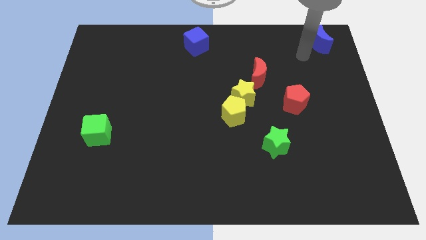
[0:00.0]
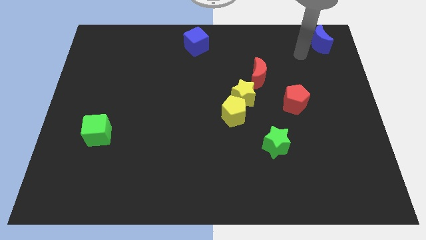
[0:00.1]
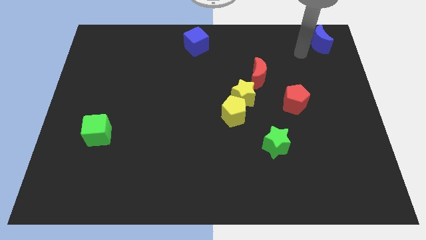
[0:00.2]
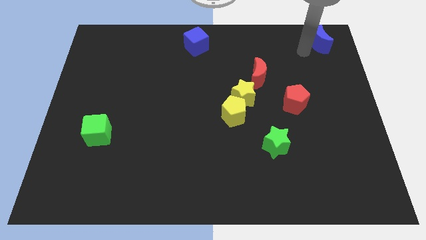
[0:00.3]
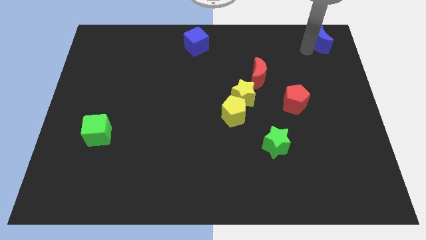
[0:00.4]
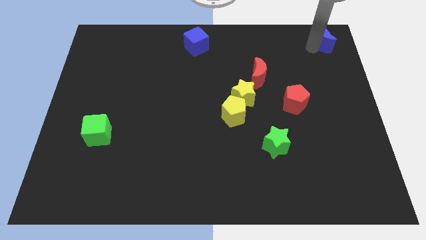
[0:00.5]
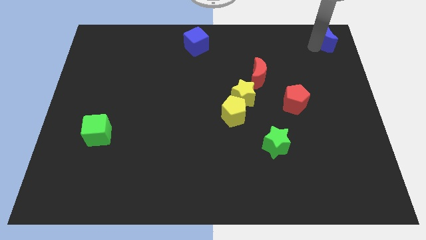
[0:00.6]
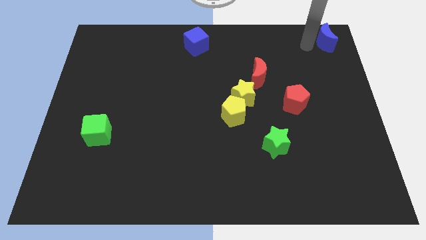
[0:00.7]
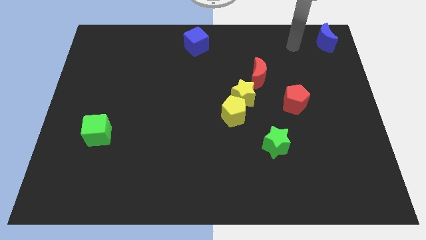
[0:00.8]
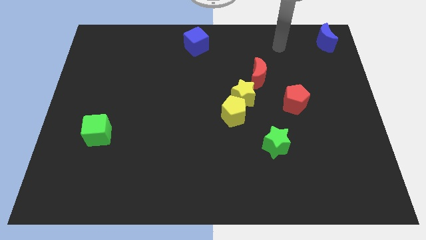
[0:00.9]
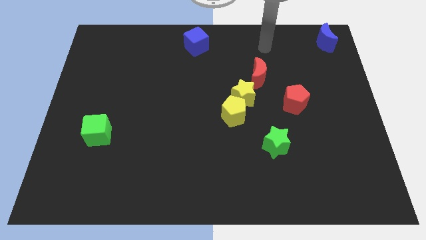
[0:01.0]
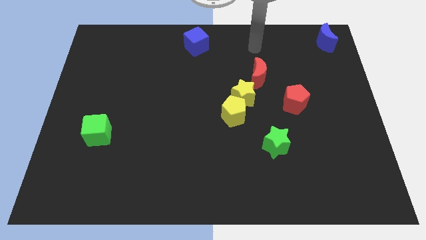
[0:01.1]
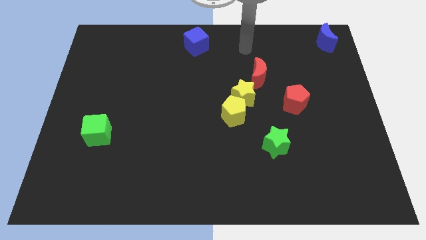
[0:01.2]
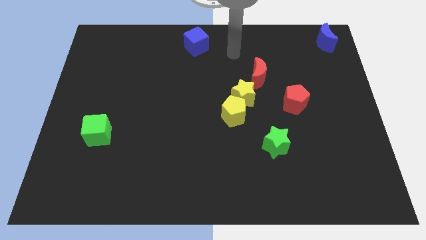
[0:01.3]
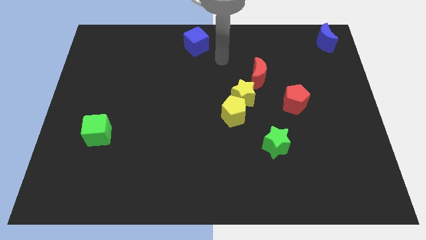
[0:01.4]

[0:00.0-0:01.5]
put your arm in between the blue cube and red moon

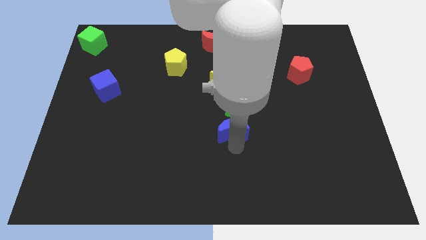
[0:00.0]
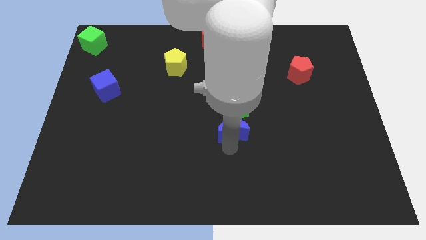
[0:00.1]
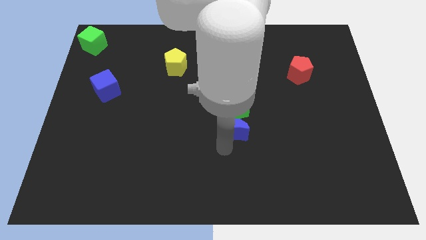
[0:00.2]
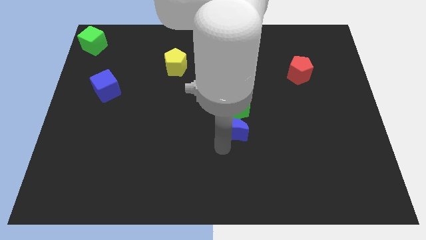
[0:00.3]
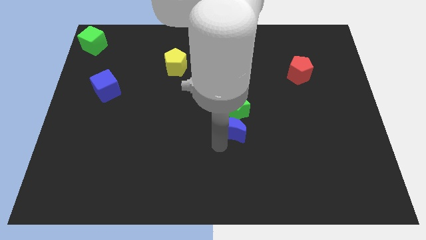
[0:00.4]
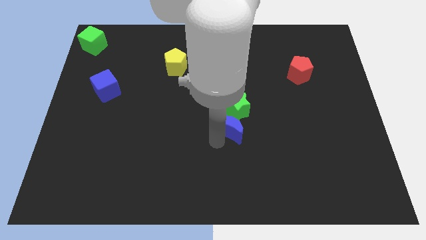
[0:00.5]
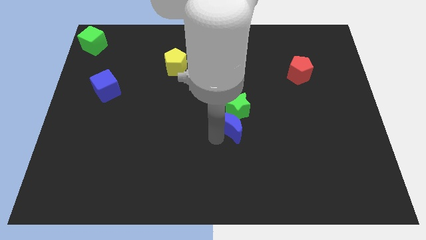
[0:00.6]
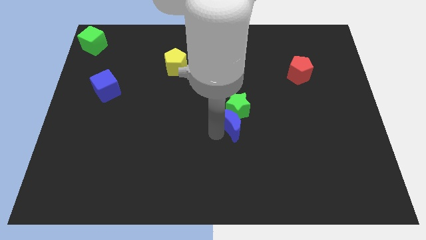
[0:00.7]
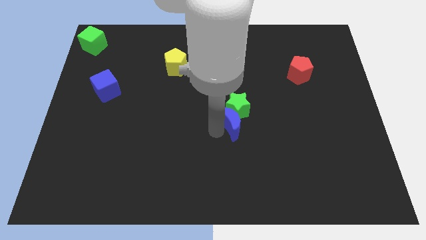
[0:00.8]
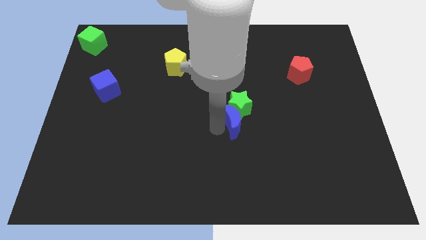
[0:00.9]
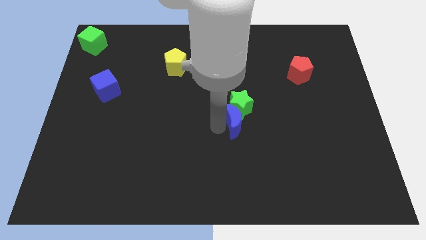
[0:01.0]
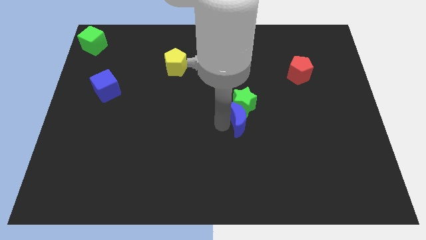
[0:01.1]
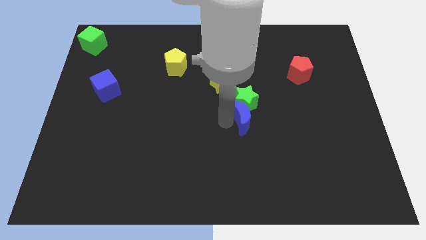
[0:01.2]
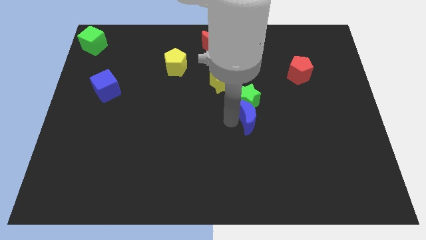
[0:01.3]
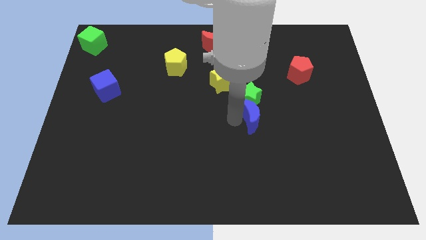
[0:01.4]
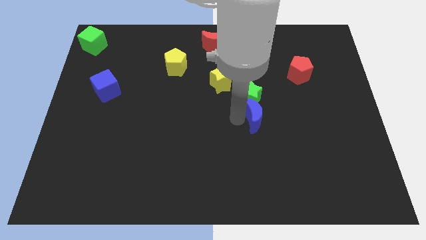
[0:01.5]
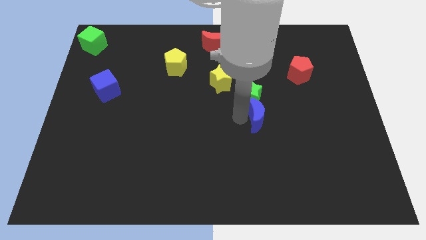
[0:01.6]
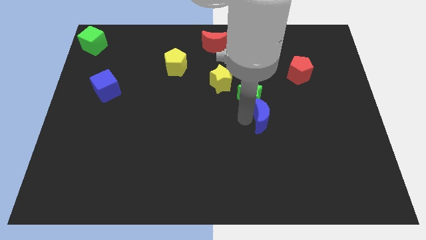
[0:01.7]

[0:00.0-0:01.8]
push the blue moon into the green star

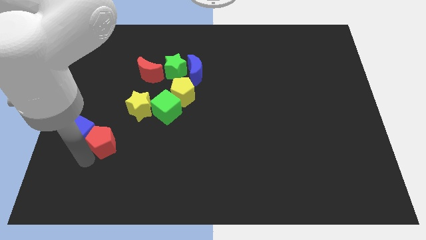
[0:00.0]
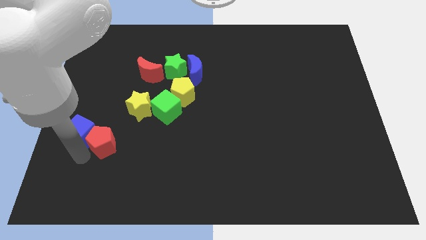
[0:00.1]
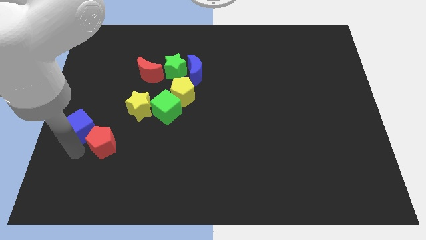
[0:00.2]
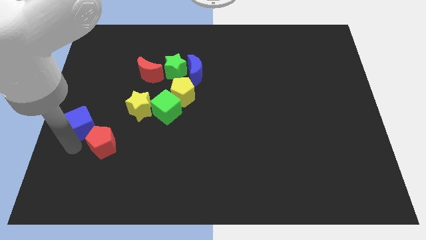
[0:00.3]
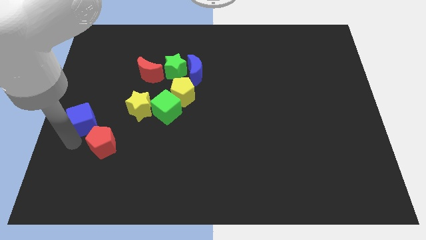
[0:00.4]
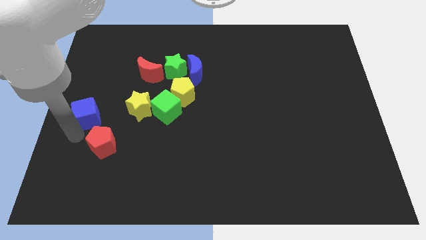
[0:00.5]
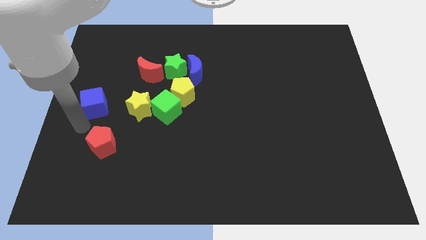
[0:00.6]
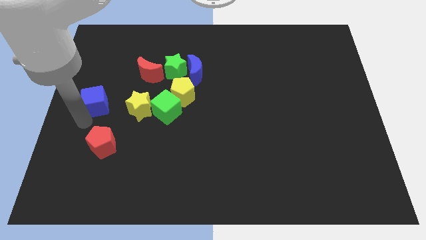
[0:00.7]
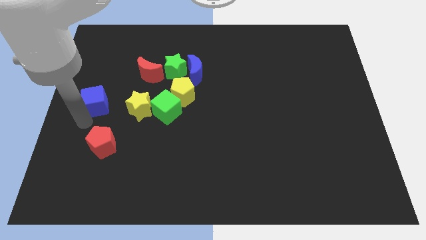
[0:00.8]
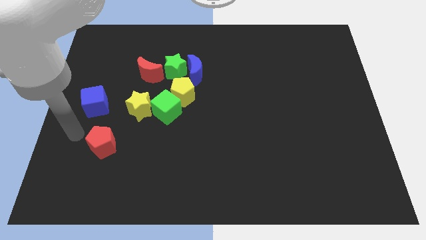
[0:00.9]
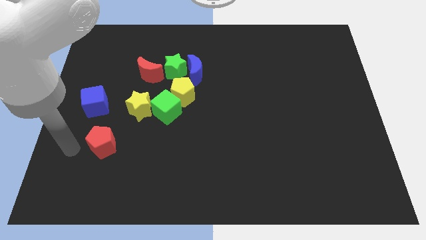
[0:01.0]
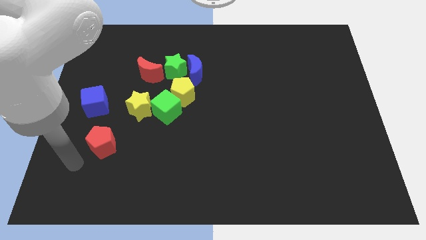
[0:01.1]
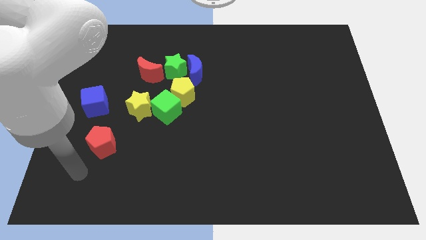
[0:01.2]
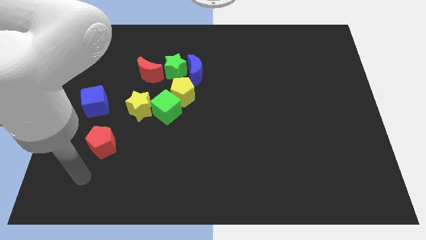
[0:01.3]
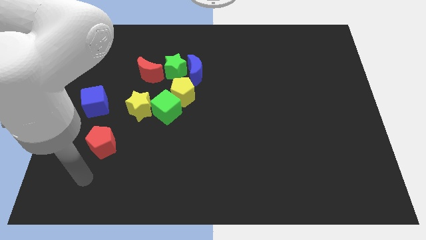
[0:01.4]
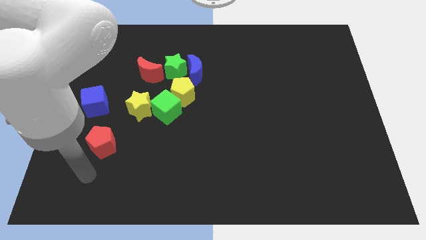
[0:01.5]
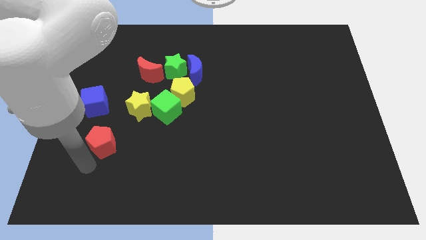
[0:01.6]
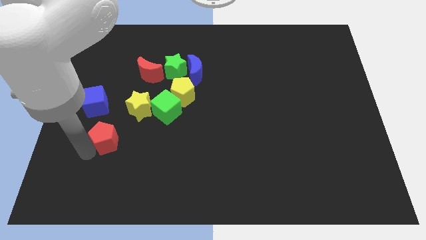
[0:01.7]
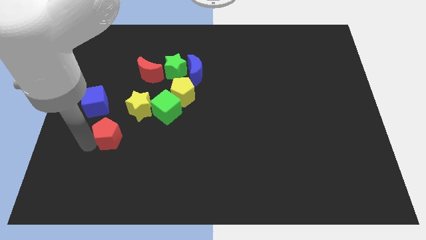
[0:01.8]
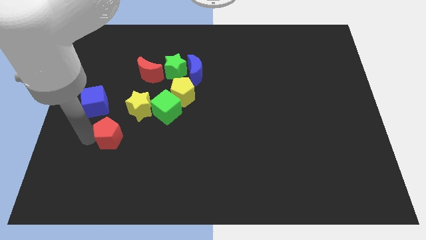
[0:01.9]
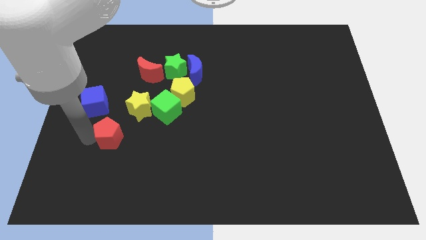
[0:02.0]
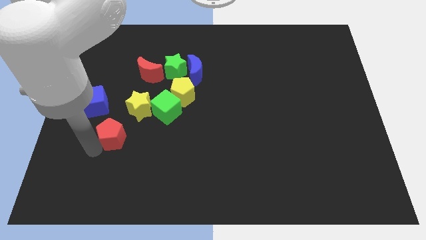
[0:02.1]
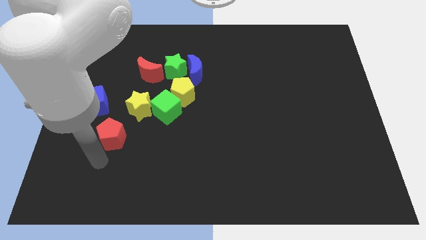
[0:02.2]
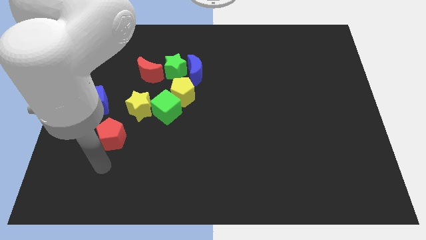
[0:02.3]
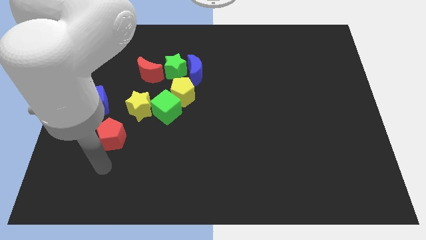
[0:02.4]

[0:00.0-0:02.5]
put the blue cube to the left of the yellow star

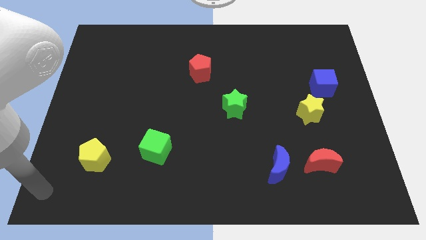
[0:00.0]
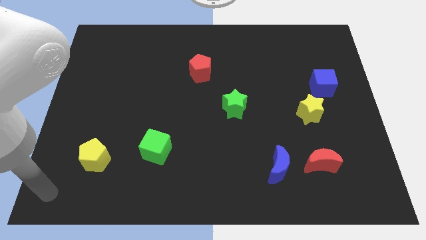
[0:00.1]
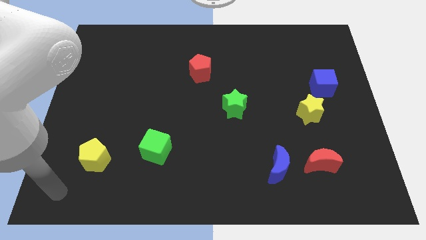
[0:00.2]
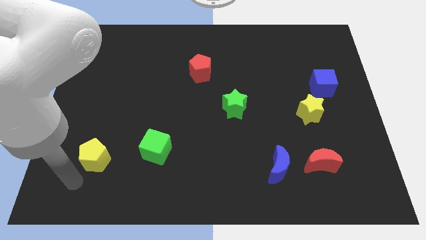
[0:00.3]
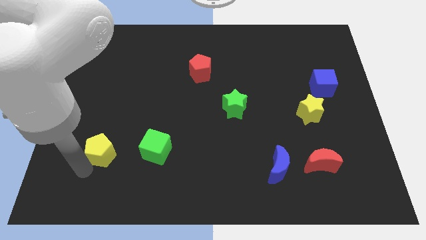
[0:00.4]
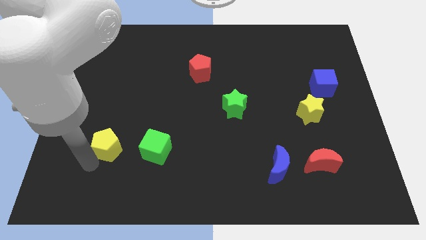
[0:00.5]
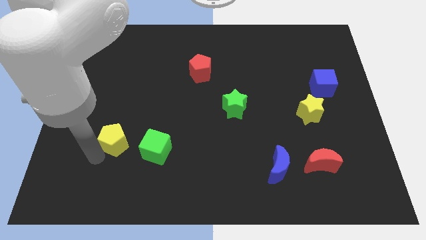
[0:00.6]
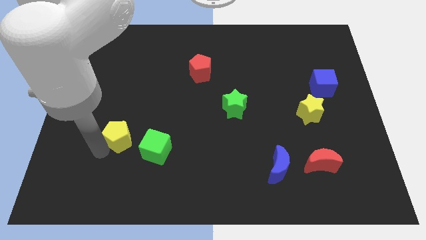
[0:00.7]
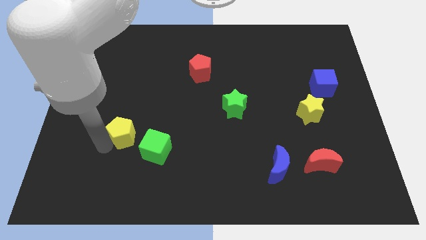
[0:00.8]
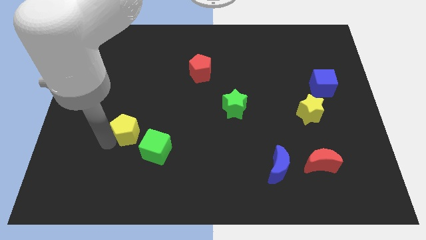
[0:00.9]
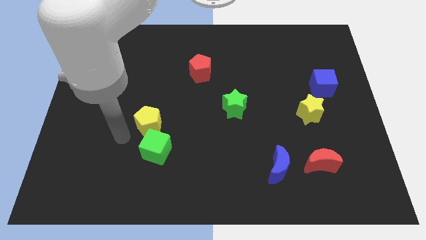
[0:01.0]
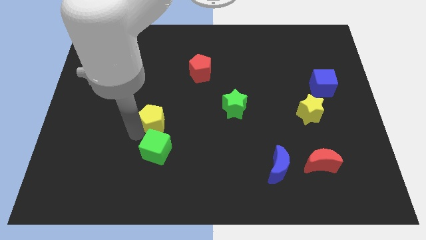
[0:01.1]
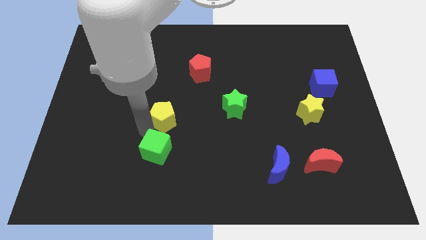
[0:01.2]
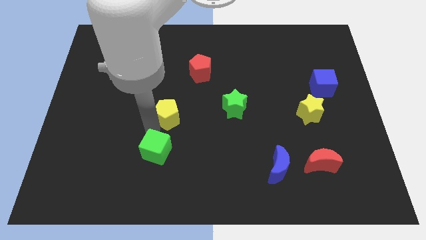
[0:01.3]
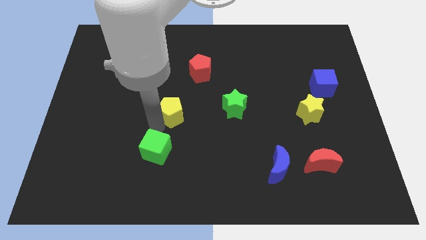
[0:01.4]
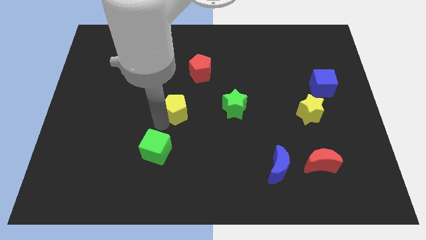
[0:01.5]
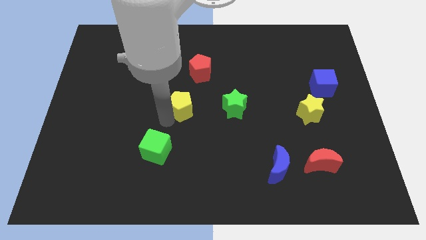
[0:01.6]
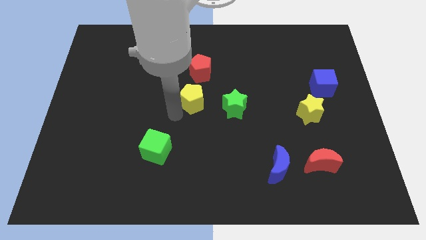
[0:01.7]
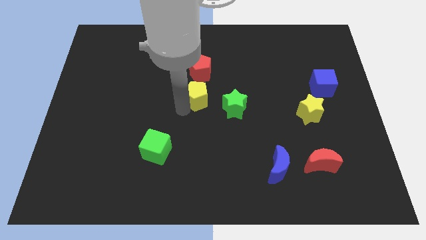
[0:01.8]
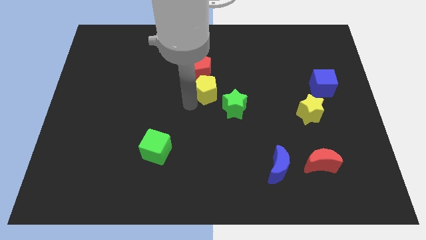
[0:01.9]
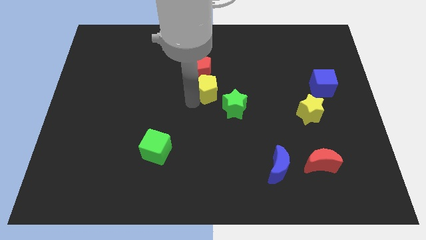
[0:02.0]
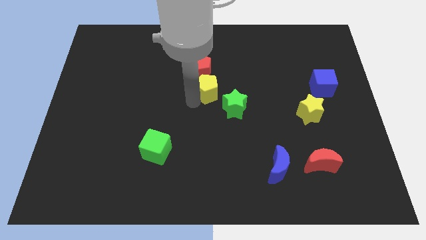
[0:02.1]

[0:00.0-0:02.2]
push the yellow pentagon down to the red pentagon

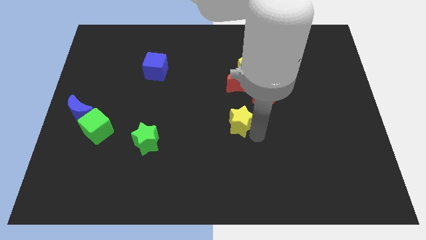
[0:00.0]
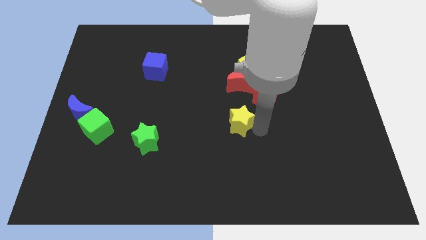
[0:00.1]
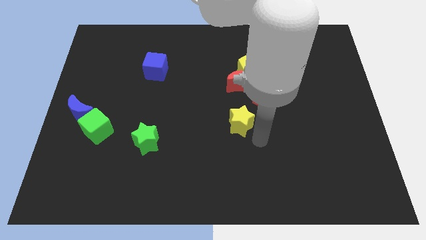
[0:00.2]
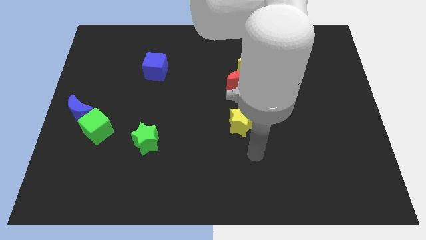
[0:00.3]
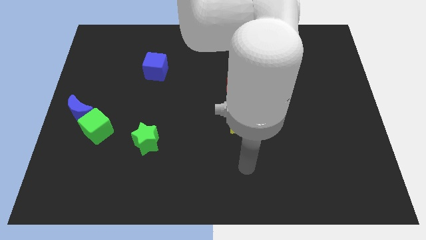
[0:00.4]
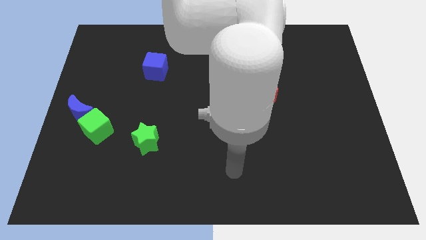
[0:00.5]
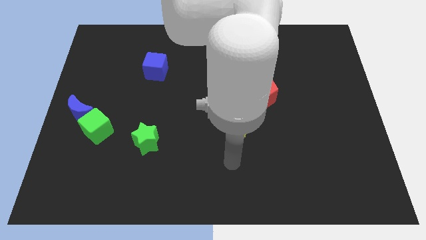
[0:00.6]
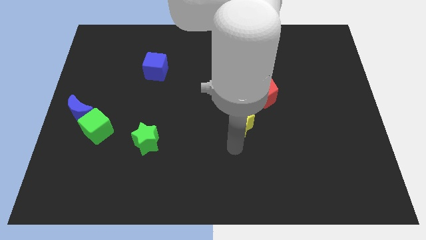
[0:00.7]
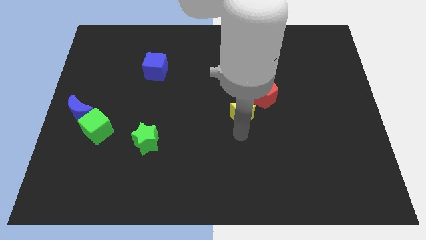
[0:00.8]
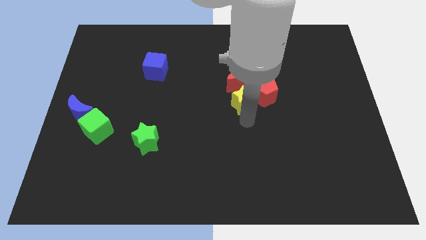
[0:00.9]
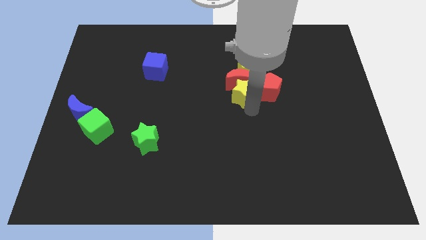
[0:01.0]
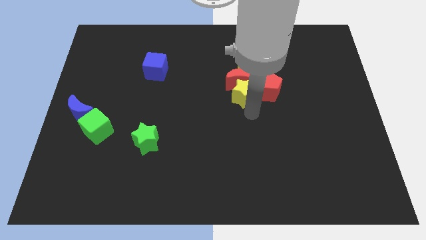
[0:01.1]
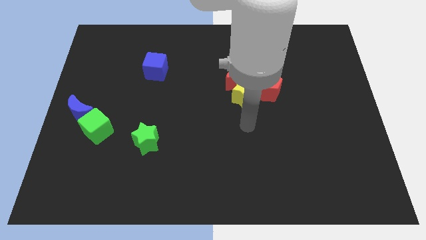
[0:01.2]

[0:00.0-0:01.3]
move the yellow star into the red blocks
